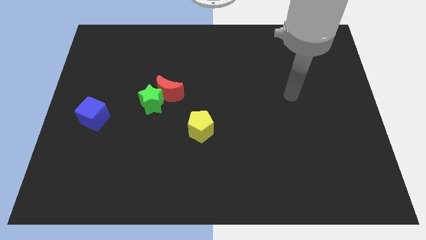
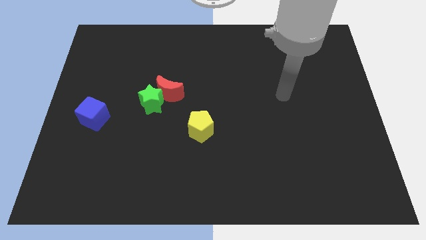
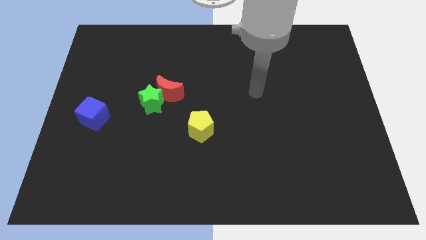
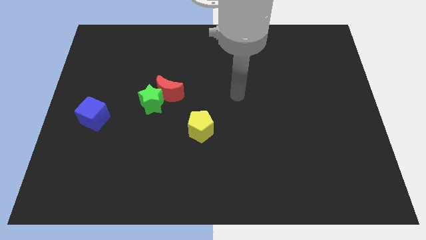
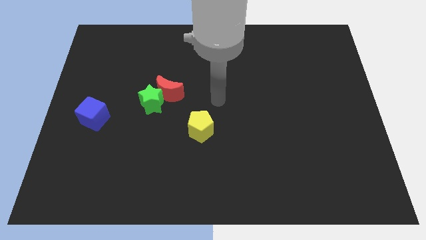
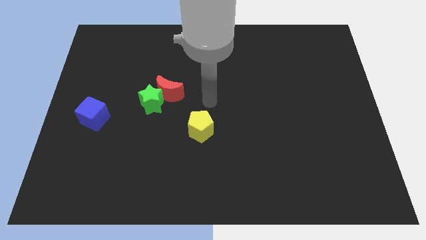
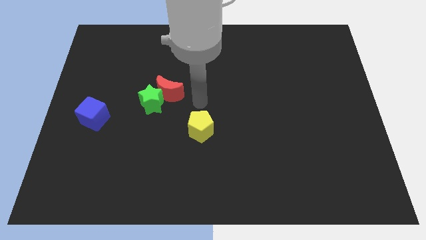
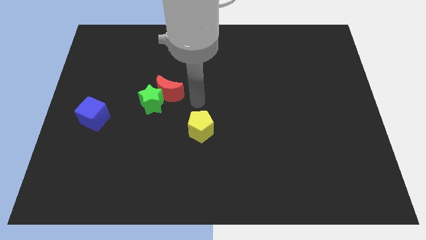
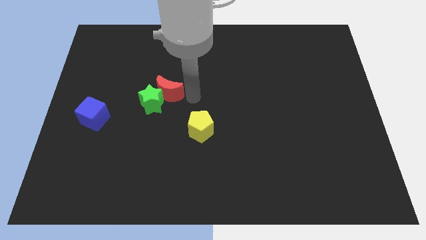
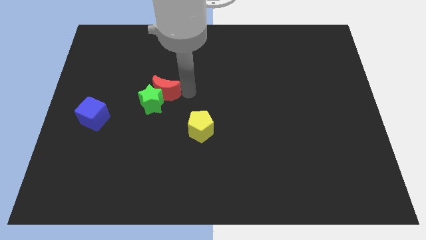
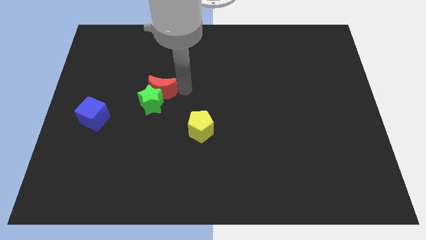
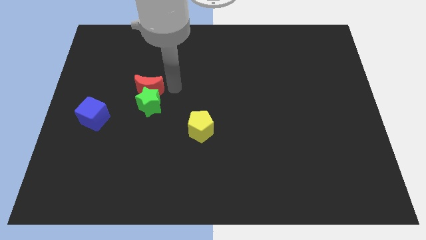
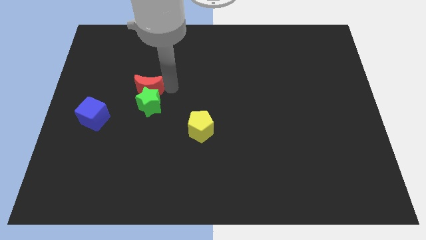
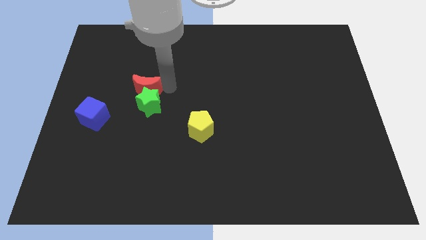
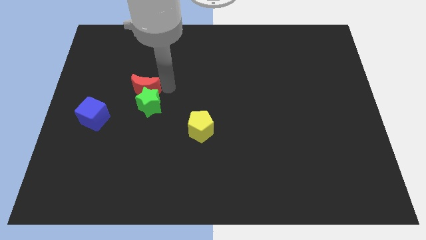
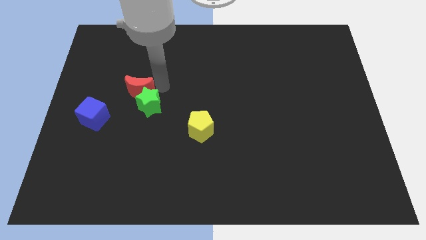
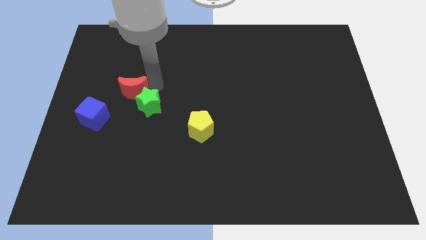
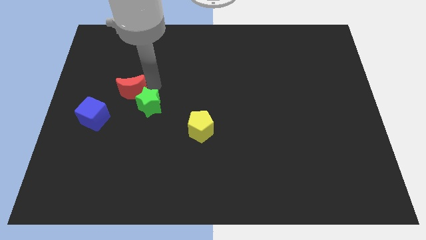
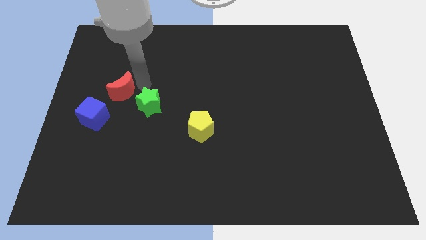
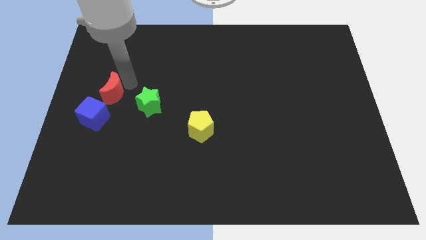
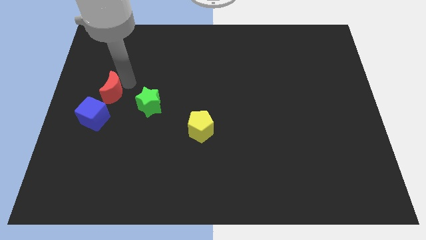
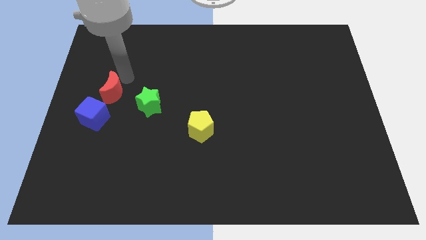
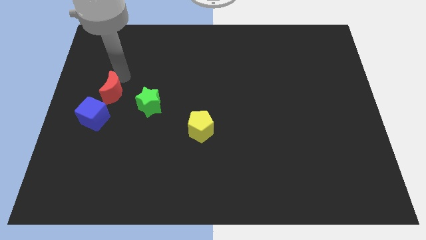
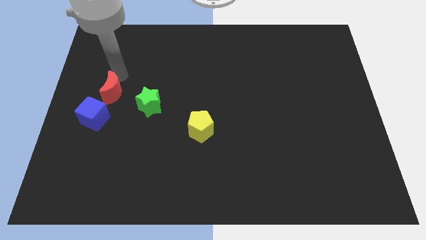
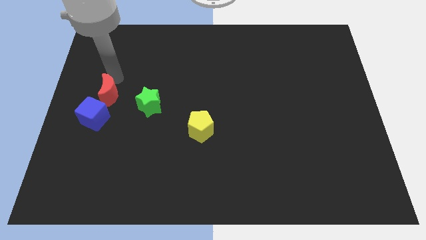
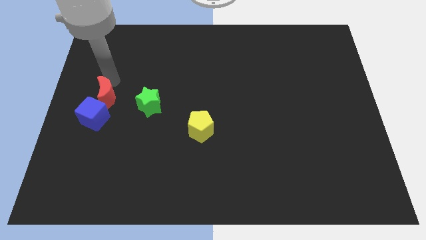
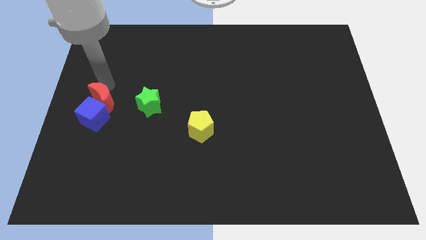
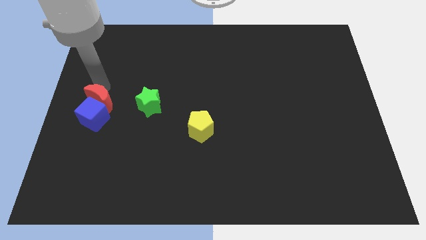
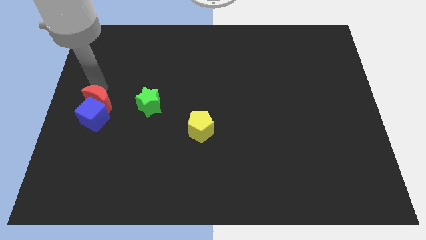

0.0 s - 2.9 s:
move the red moon close to the blue cube

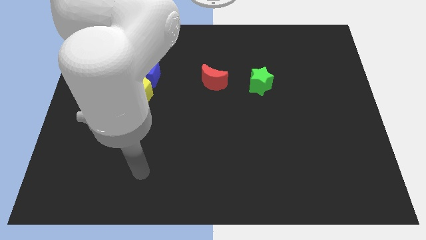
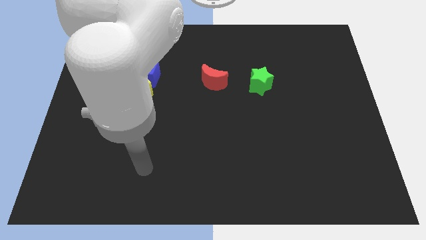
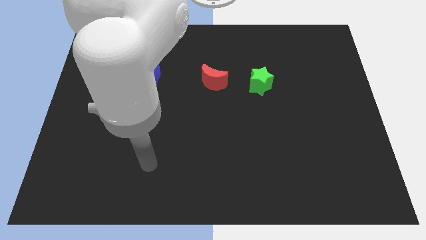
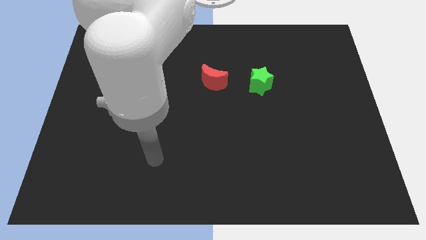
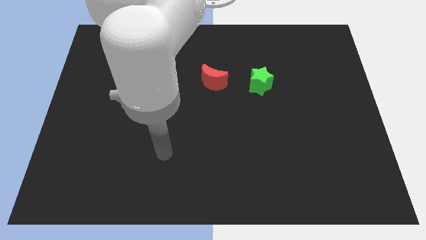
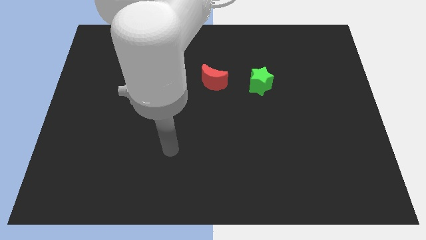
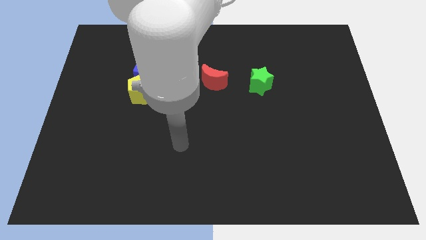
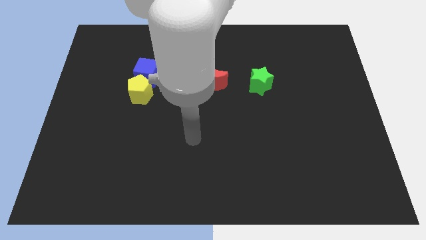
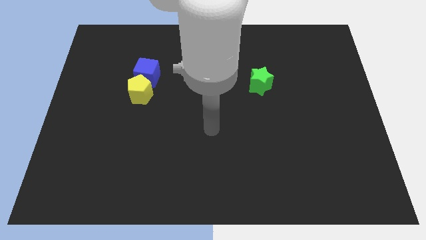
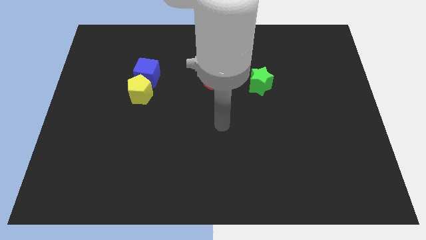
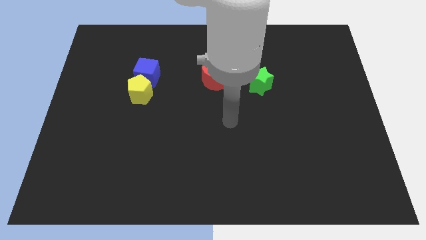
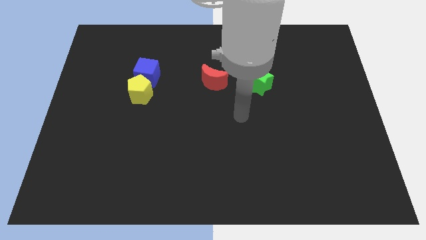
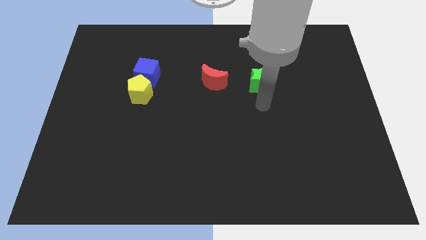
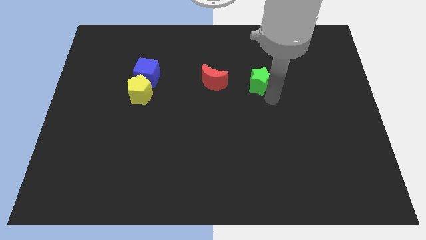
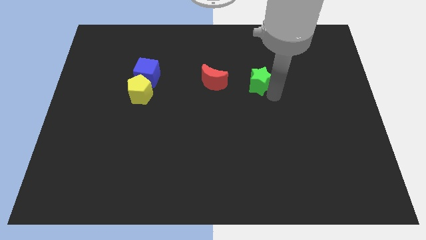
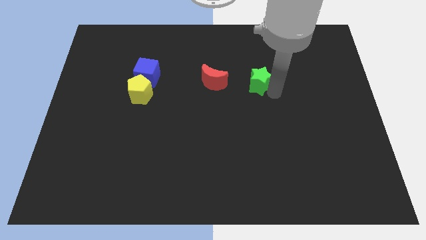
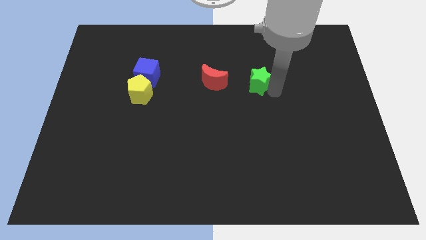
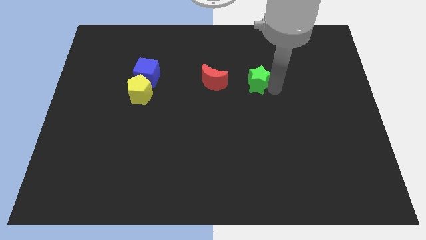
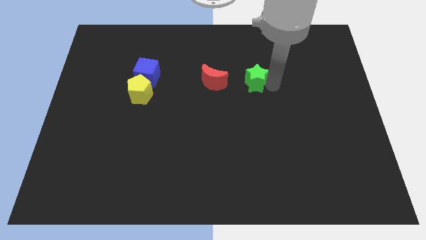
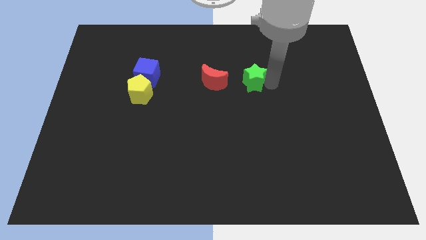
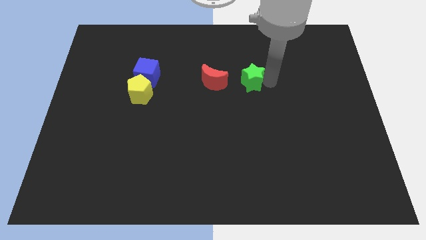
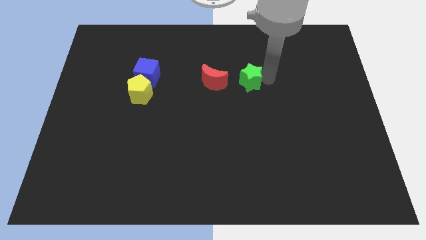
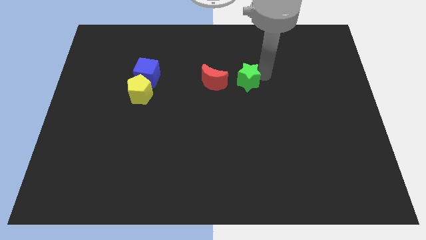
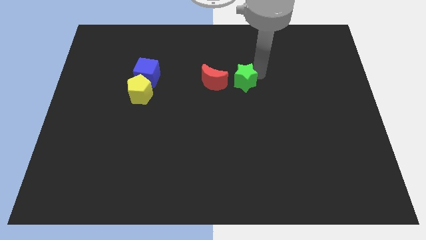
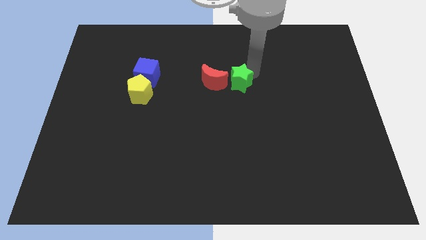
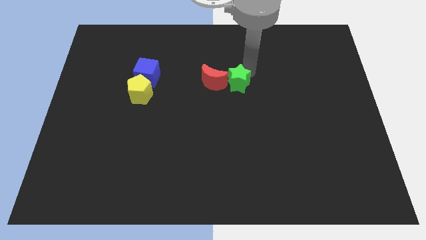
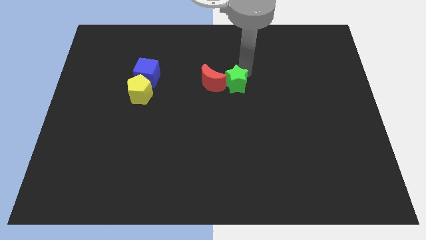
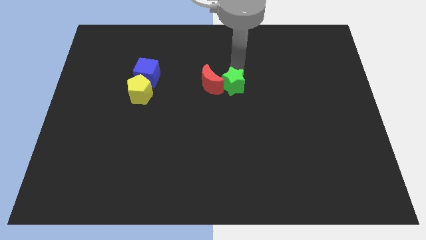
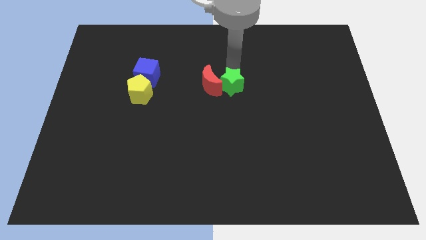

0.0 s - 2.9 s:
put the green block close to the red block

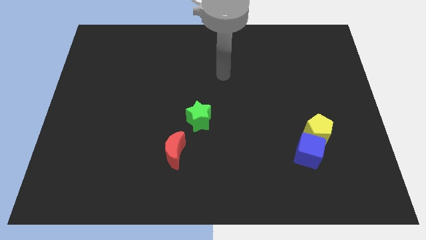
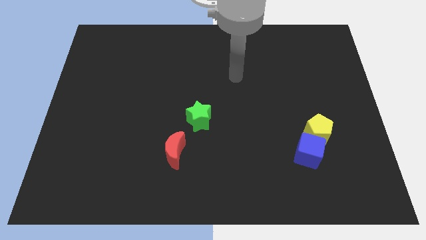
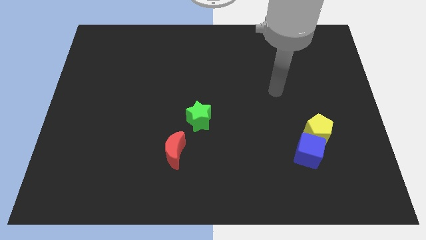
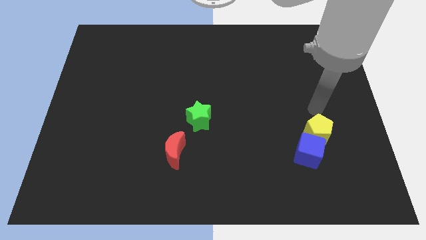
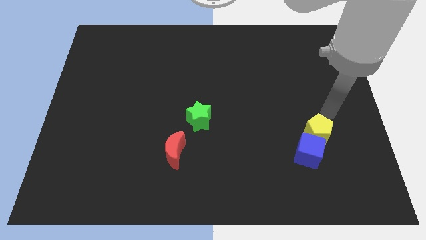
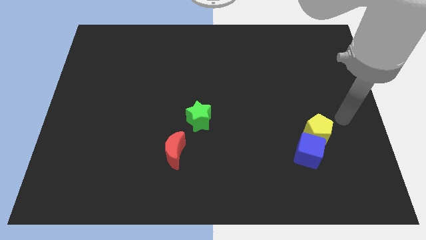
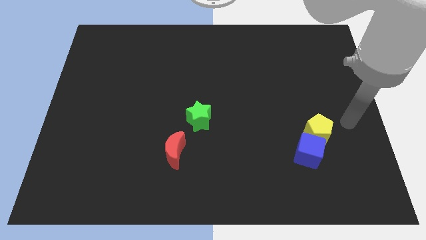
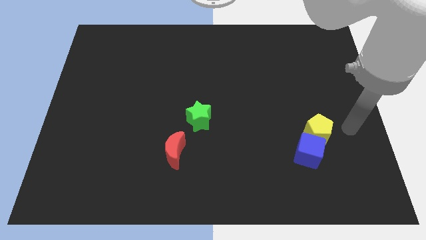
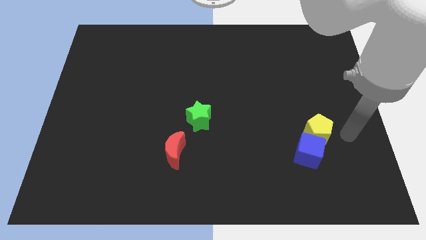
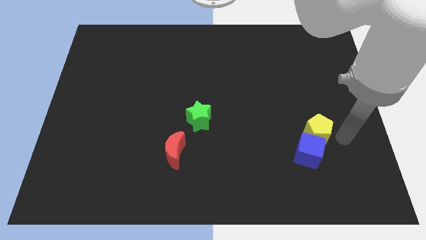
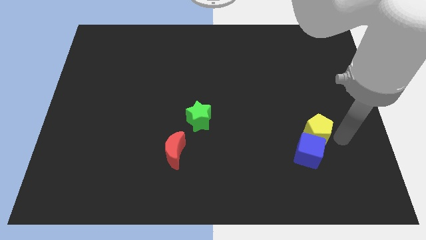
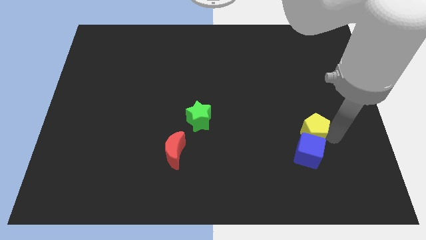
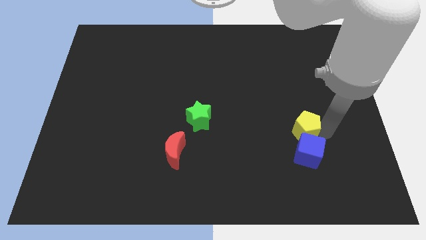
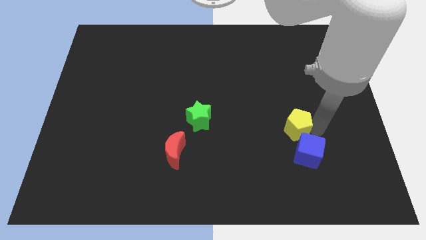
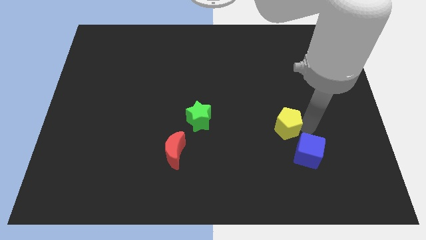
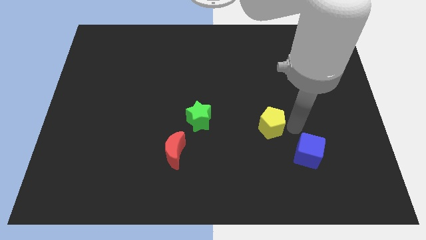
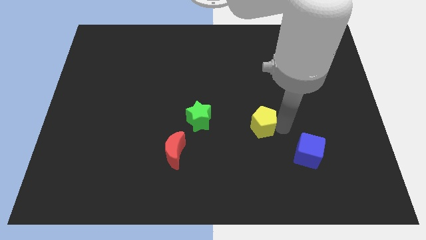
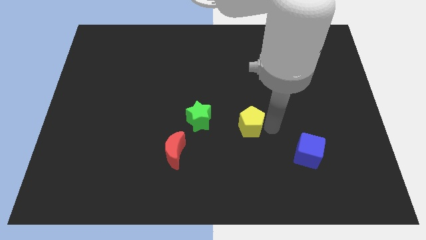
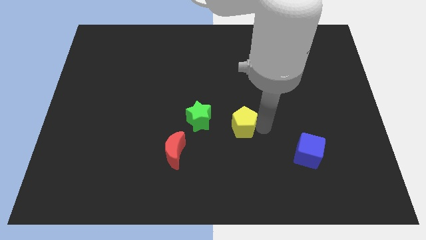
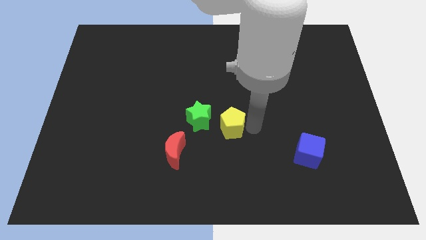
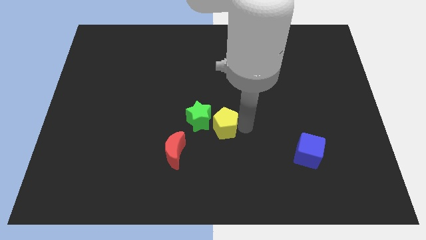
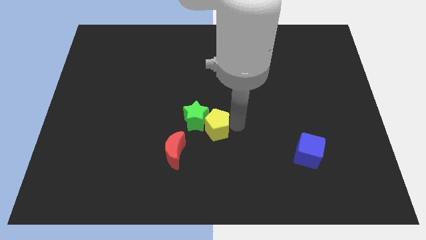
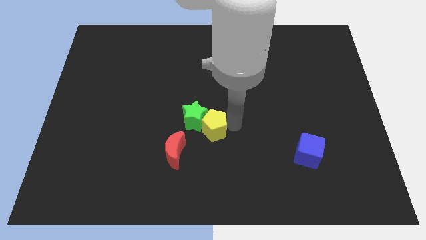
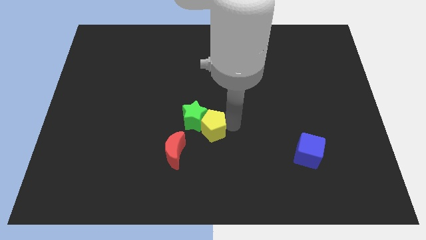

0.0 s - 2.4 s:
slide the pentagon to the green block
